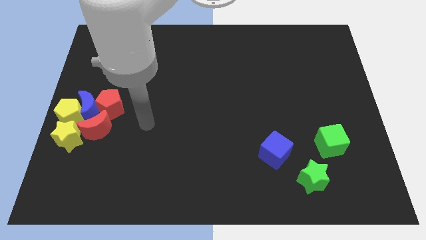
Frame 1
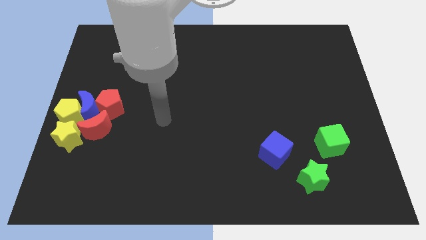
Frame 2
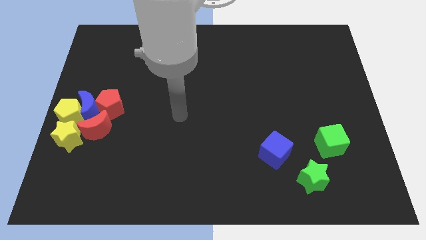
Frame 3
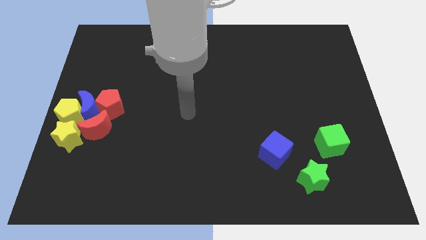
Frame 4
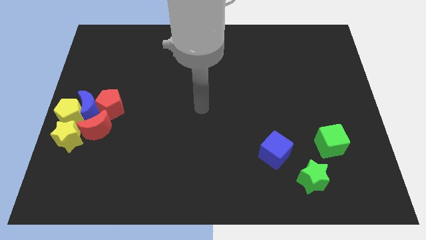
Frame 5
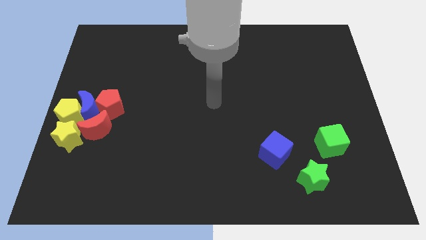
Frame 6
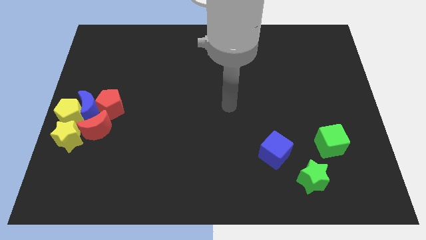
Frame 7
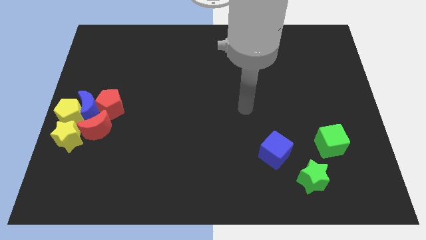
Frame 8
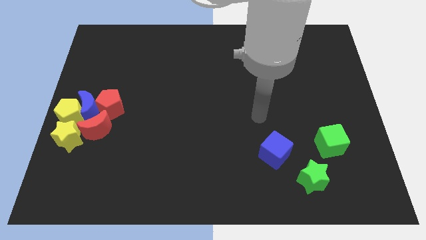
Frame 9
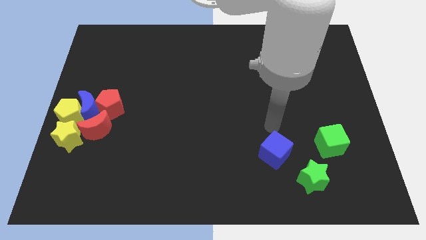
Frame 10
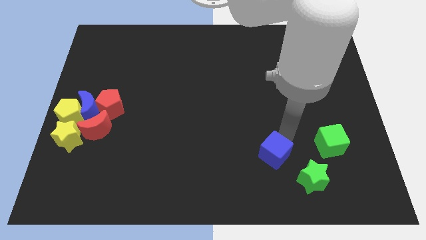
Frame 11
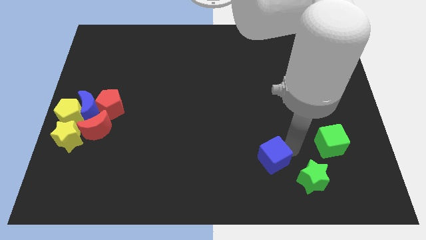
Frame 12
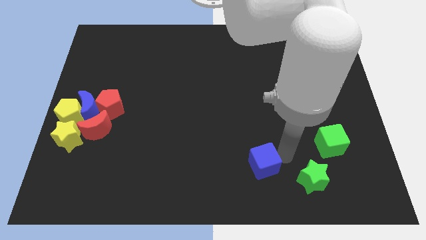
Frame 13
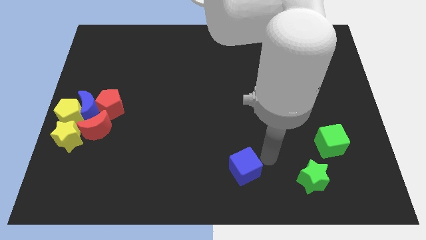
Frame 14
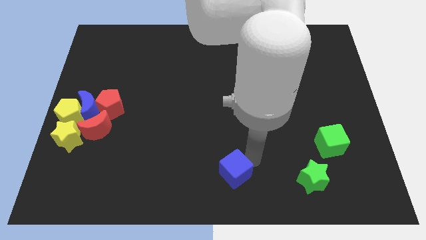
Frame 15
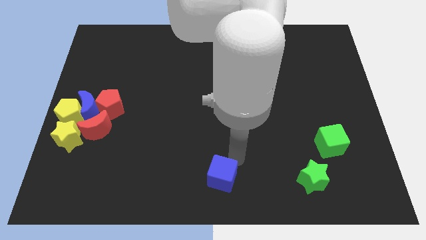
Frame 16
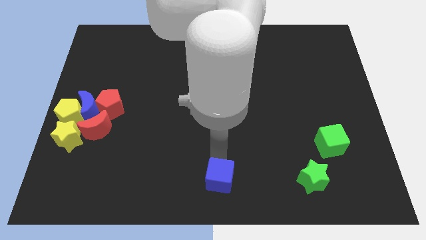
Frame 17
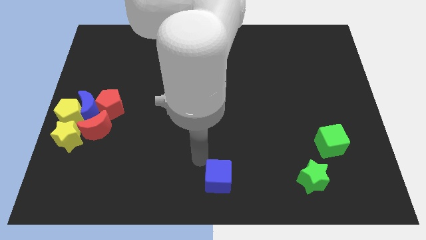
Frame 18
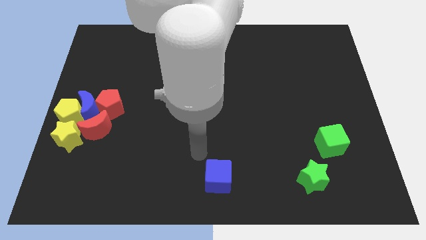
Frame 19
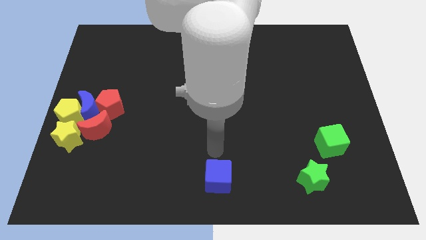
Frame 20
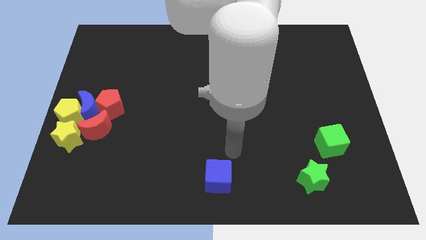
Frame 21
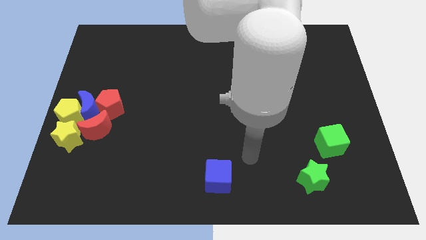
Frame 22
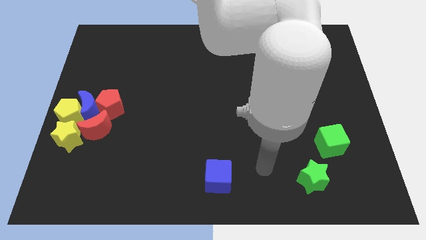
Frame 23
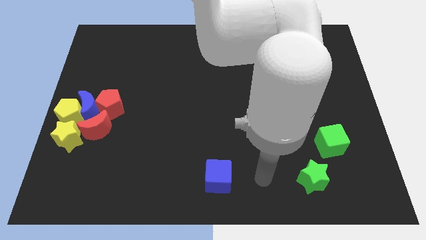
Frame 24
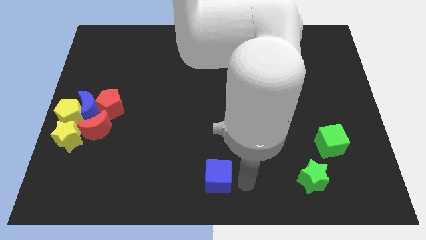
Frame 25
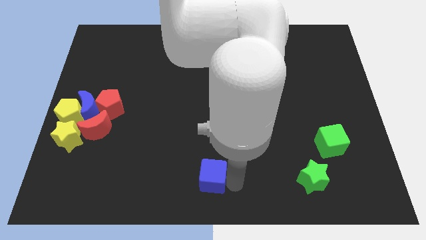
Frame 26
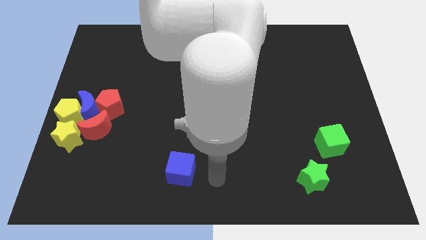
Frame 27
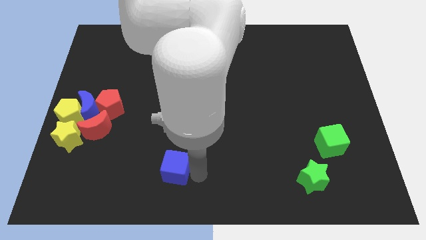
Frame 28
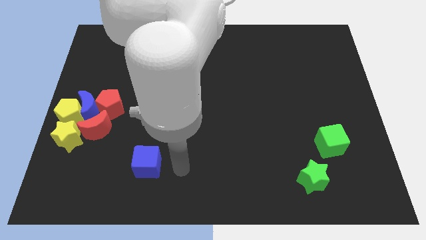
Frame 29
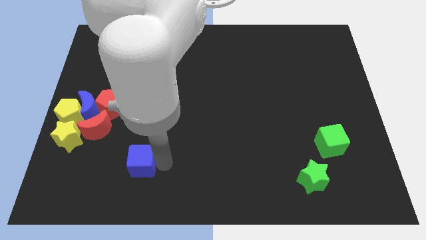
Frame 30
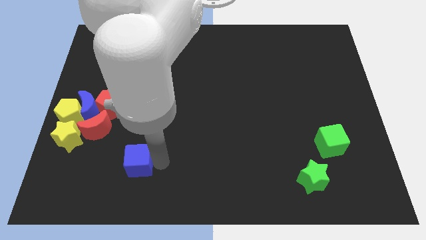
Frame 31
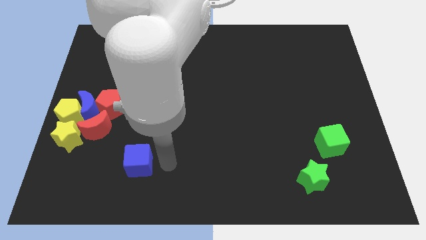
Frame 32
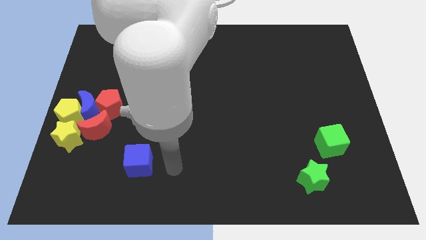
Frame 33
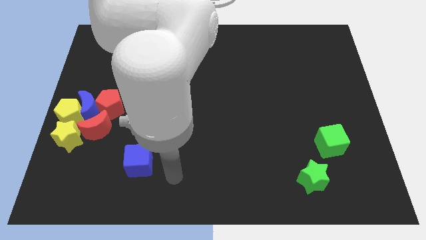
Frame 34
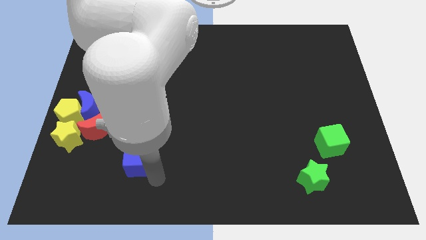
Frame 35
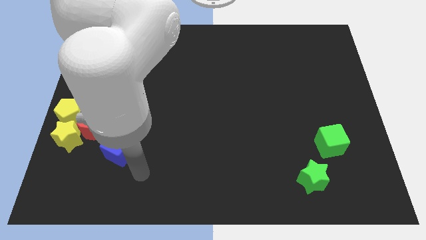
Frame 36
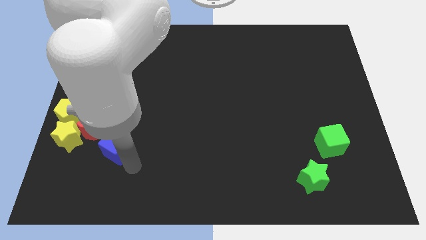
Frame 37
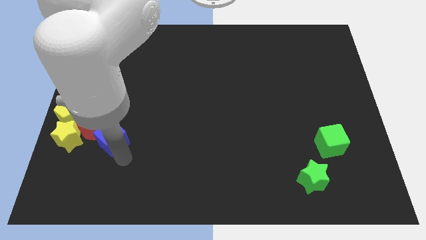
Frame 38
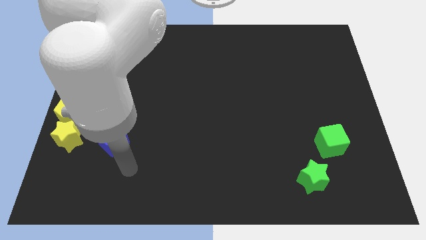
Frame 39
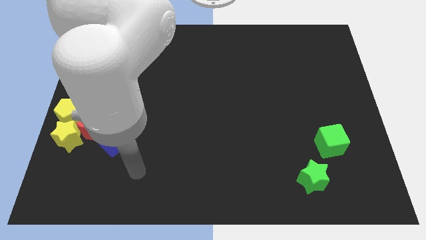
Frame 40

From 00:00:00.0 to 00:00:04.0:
make the blue cube to touch the red crescent

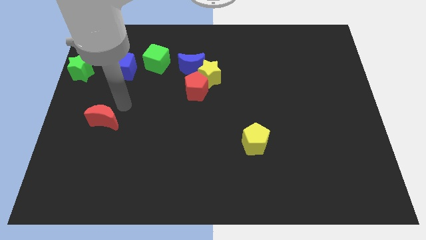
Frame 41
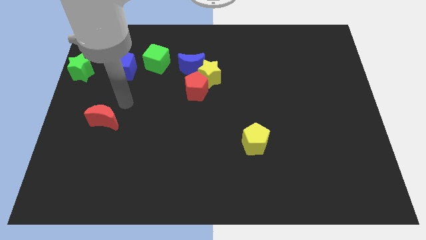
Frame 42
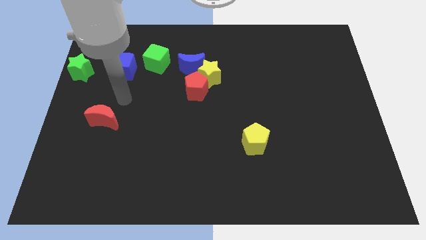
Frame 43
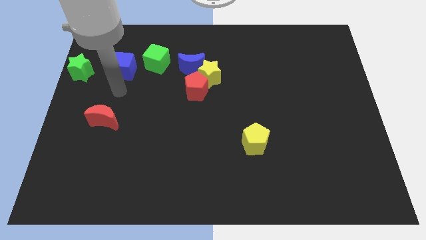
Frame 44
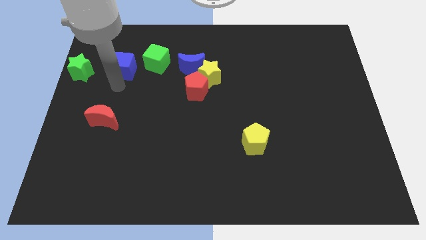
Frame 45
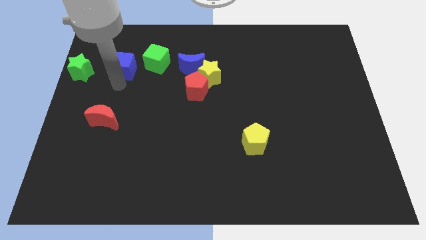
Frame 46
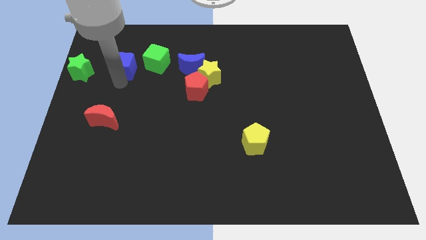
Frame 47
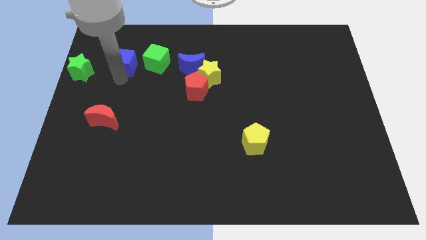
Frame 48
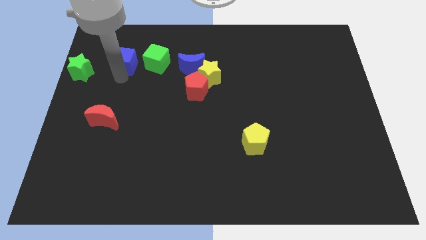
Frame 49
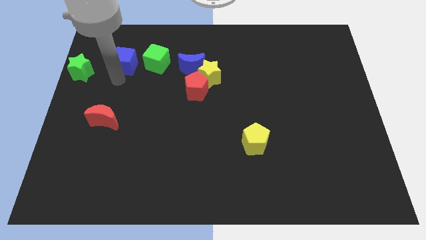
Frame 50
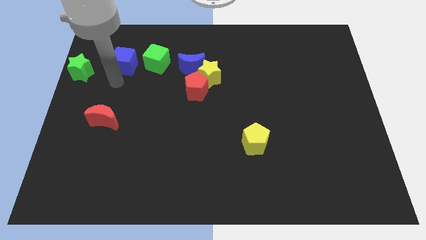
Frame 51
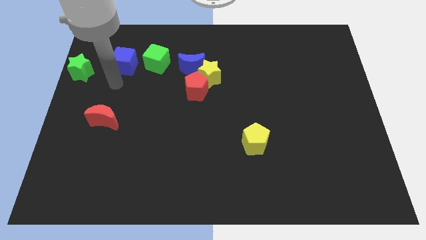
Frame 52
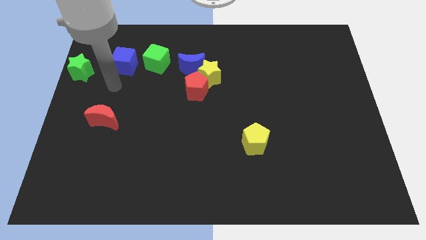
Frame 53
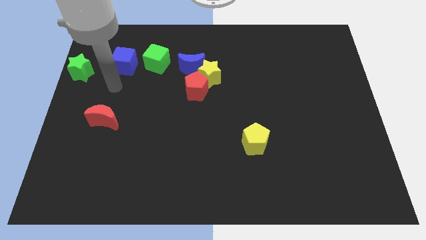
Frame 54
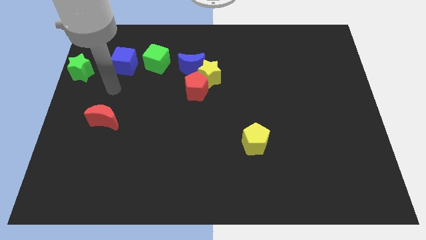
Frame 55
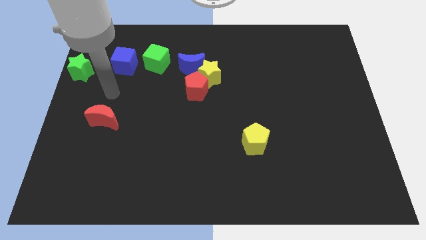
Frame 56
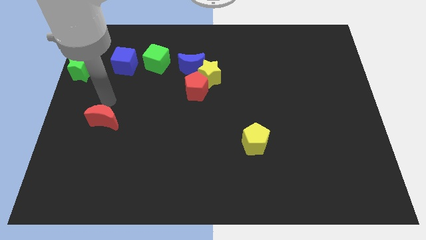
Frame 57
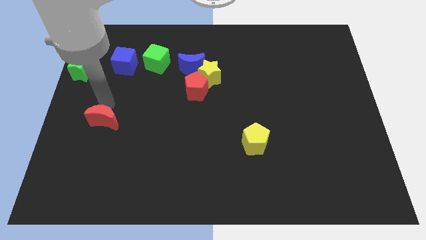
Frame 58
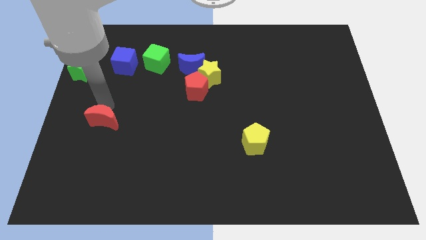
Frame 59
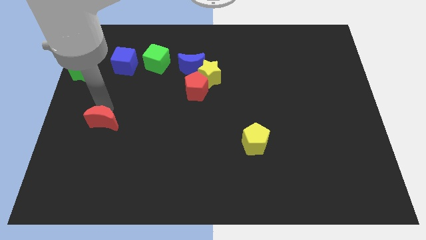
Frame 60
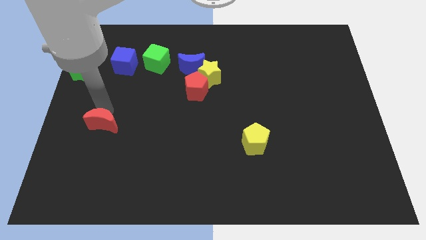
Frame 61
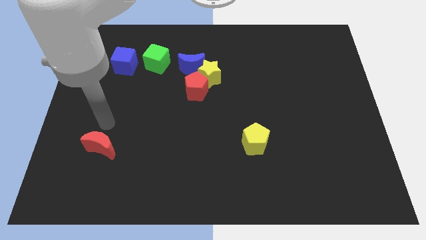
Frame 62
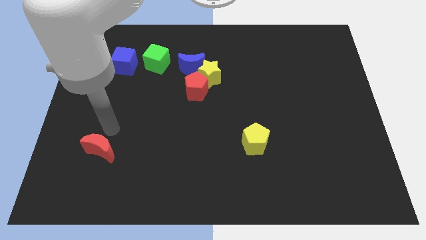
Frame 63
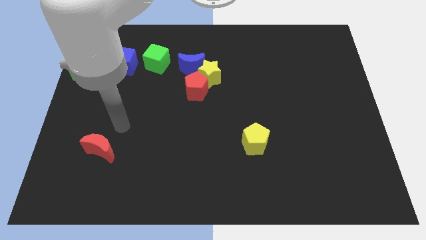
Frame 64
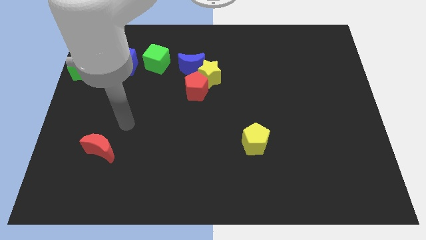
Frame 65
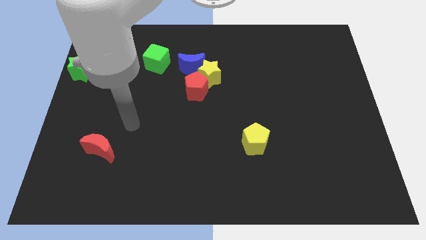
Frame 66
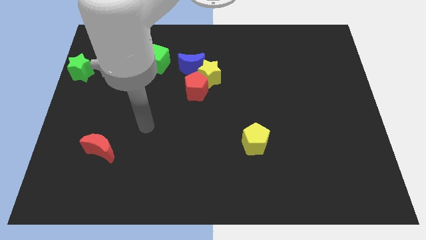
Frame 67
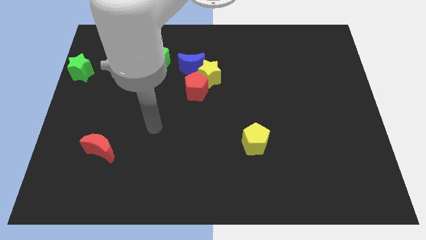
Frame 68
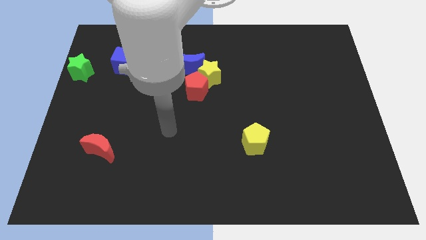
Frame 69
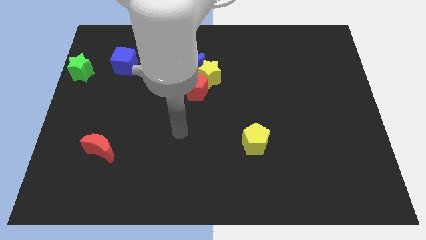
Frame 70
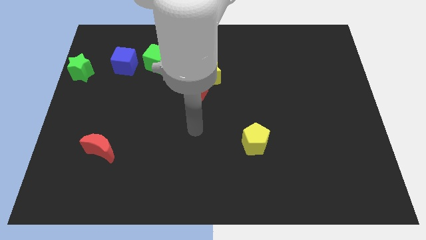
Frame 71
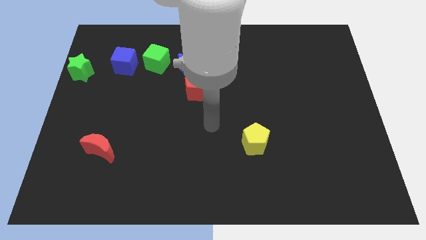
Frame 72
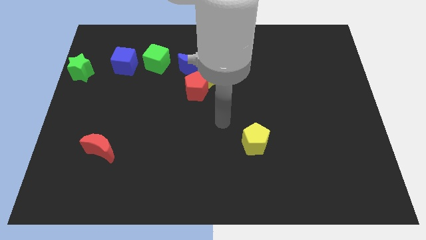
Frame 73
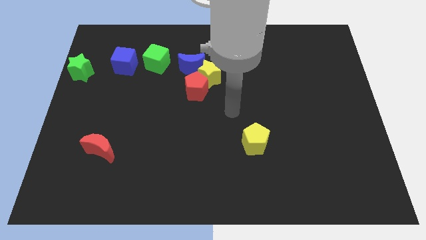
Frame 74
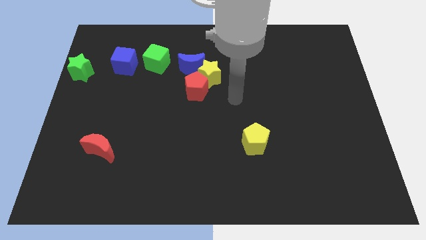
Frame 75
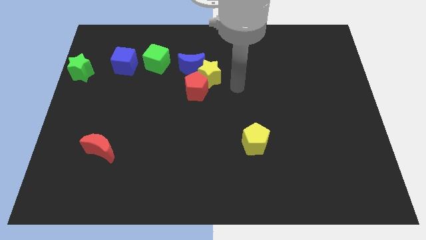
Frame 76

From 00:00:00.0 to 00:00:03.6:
slightly push the red moon down to the board

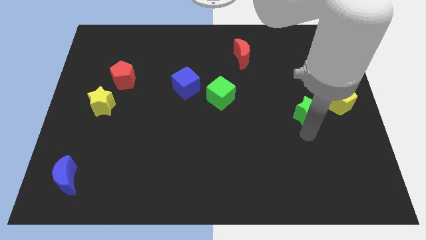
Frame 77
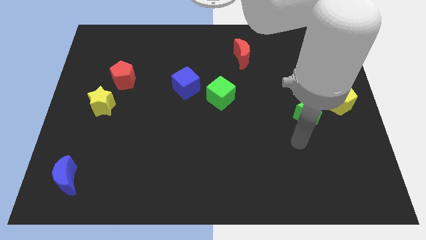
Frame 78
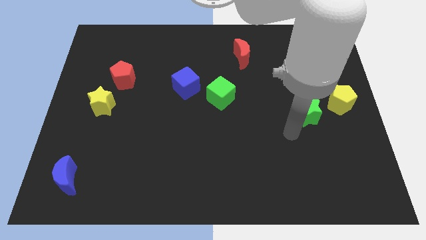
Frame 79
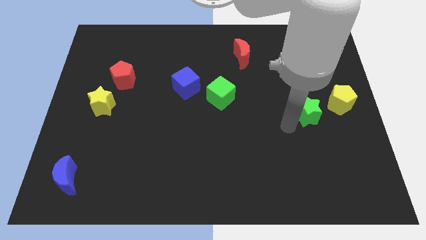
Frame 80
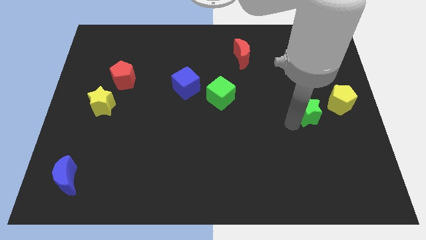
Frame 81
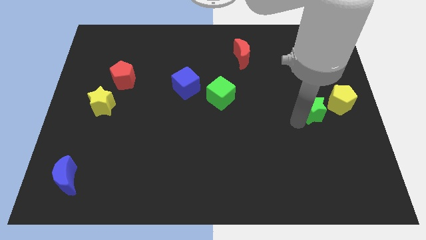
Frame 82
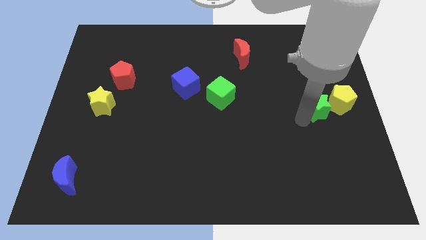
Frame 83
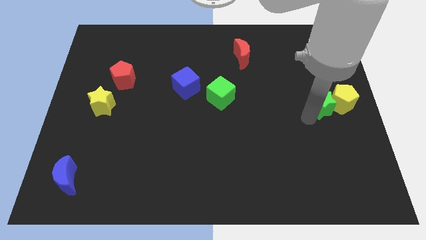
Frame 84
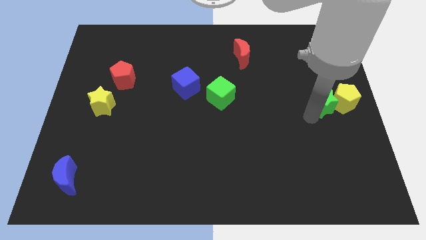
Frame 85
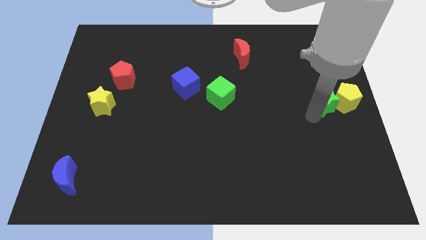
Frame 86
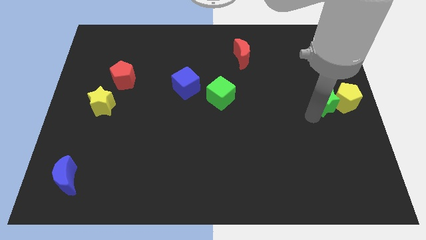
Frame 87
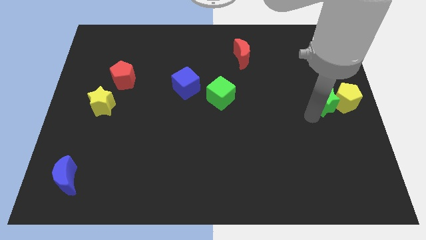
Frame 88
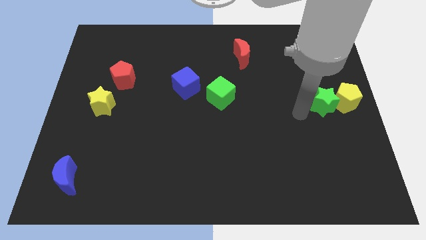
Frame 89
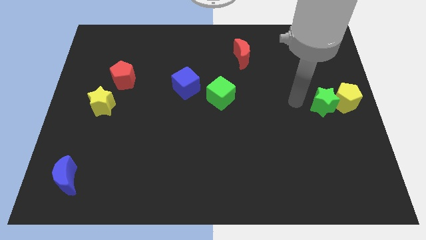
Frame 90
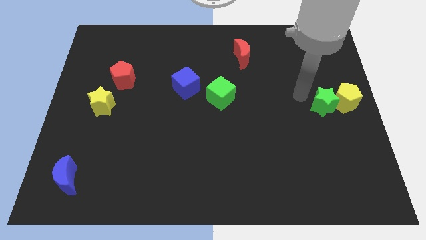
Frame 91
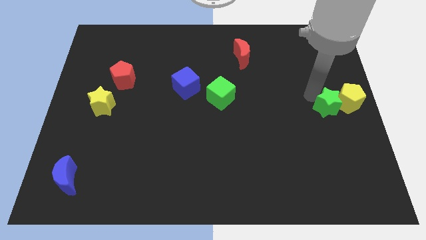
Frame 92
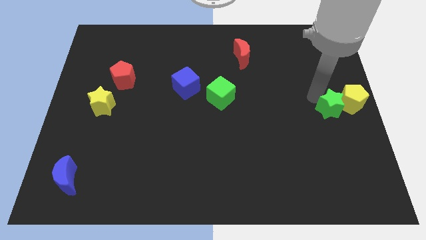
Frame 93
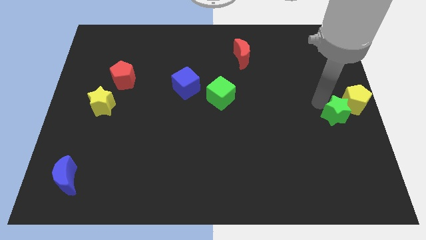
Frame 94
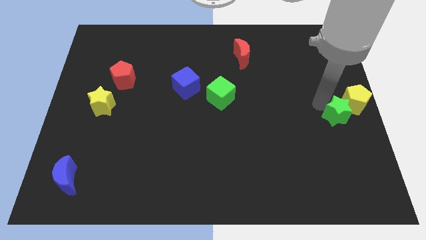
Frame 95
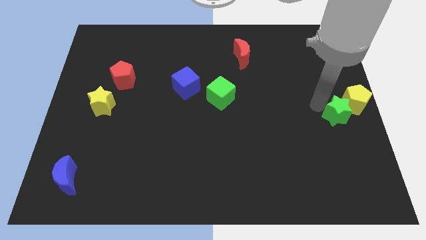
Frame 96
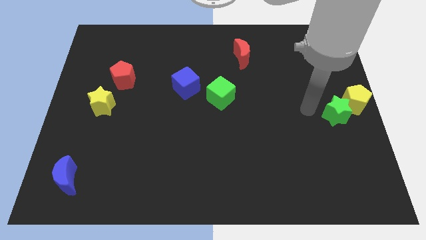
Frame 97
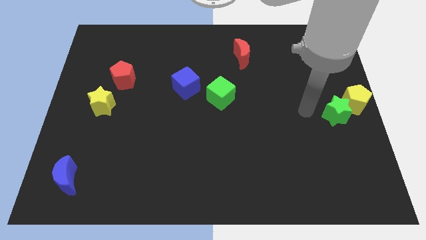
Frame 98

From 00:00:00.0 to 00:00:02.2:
move the green star into the yellow pentagon
